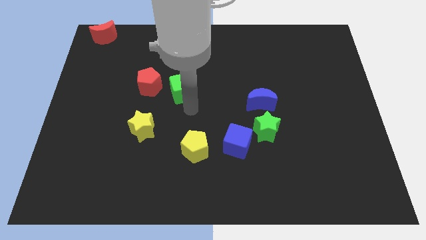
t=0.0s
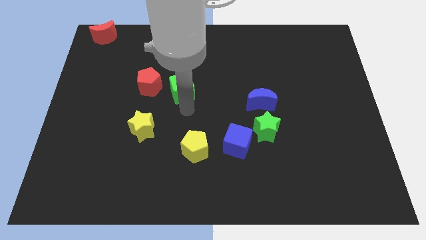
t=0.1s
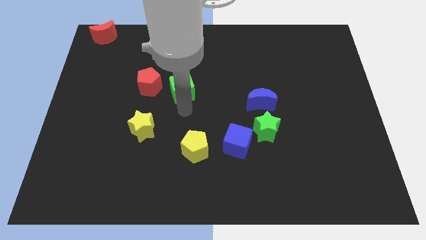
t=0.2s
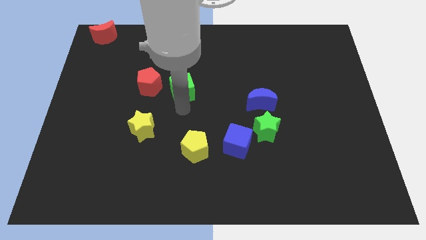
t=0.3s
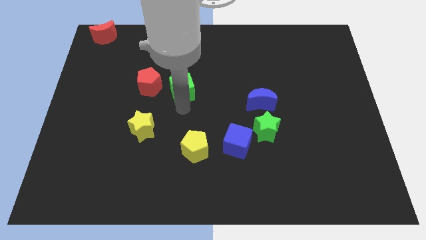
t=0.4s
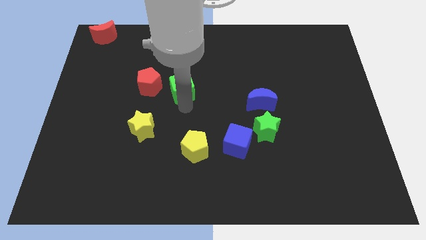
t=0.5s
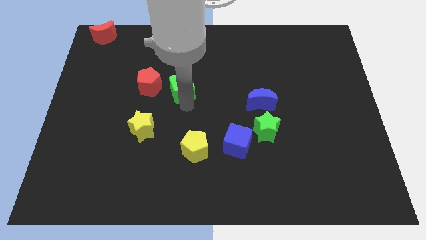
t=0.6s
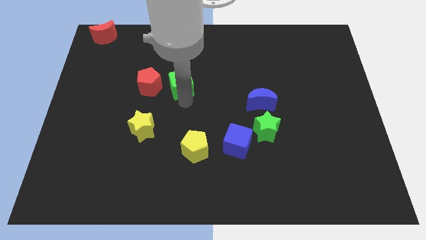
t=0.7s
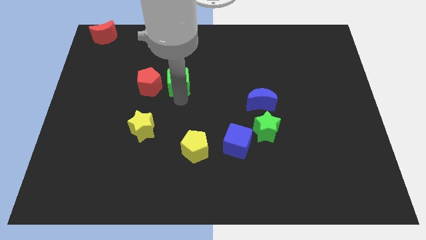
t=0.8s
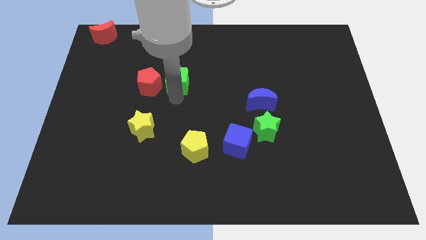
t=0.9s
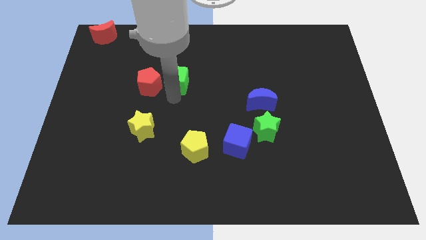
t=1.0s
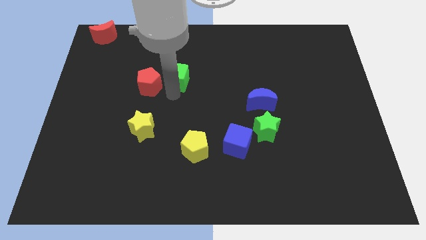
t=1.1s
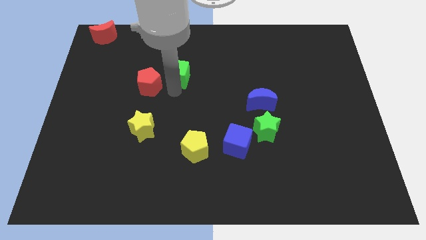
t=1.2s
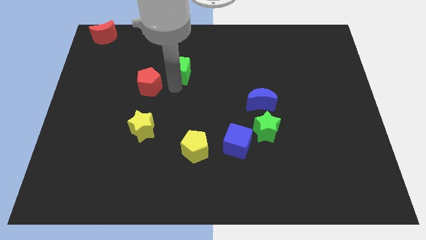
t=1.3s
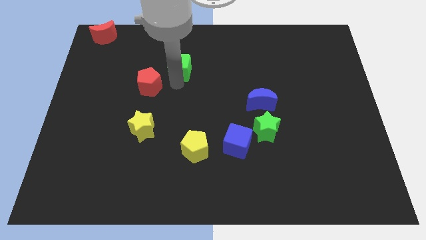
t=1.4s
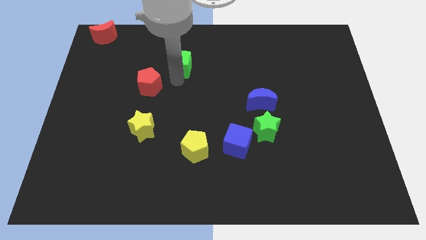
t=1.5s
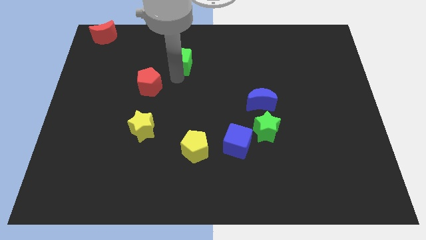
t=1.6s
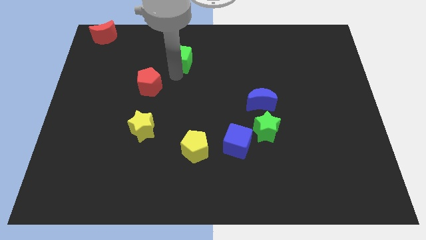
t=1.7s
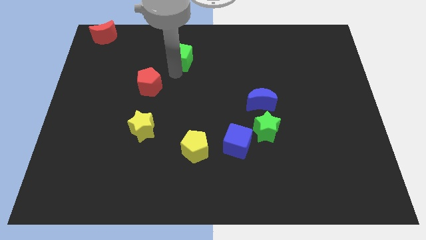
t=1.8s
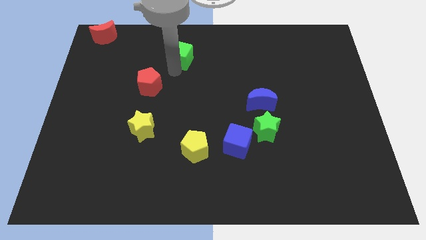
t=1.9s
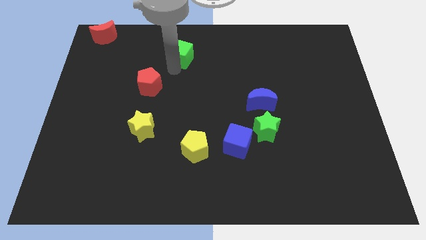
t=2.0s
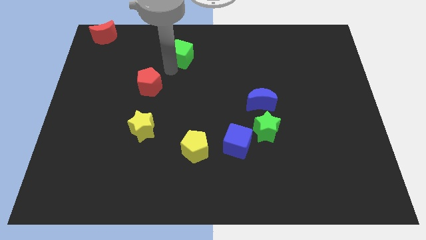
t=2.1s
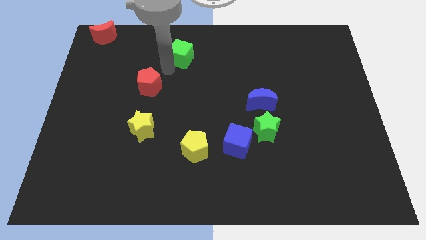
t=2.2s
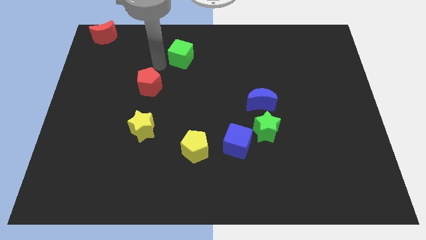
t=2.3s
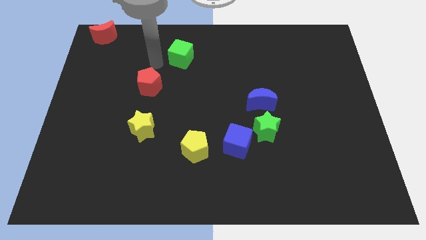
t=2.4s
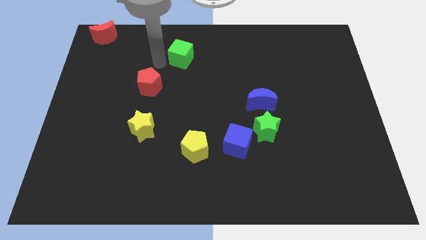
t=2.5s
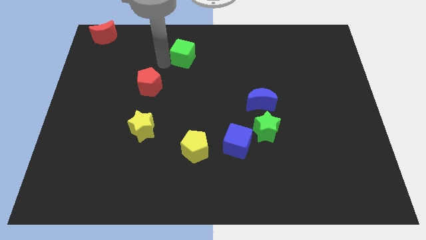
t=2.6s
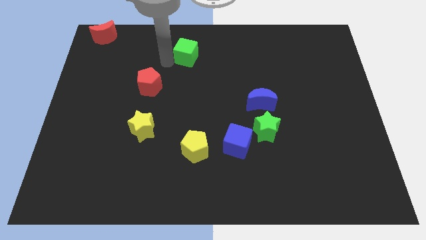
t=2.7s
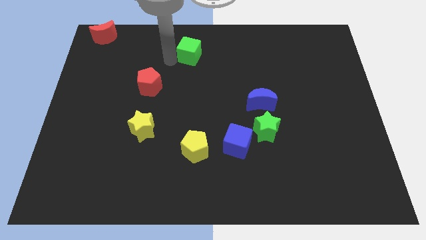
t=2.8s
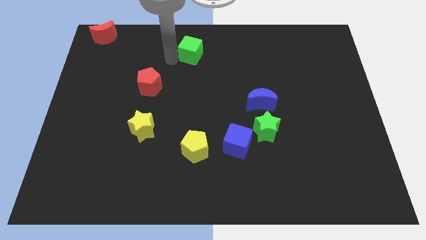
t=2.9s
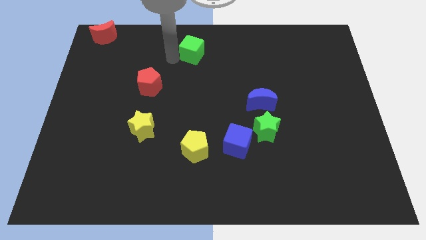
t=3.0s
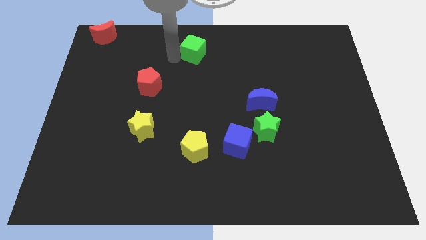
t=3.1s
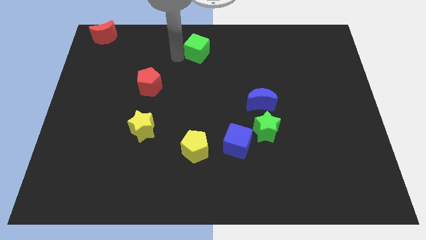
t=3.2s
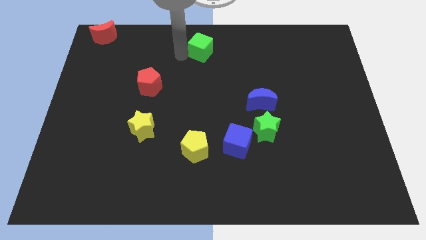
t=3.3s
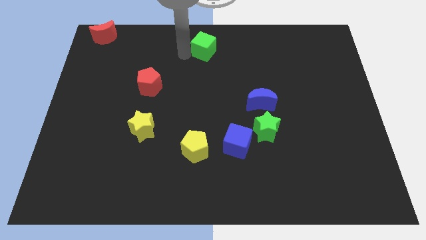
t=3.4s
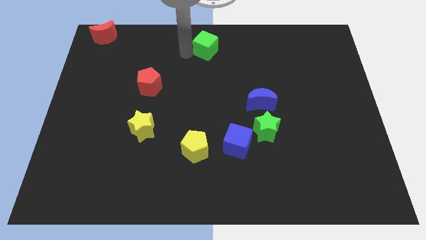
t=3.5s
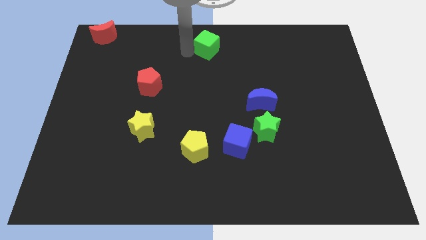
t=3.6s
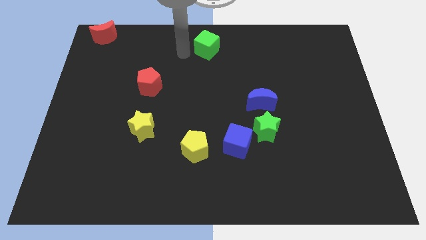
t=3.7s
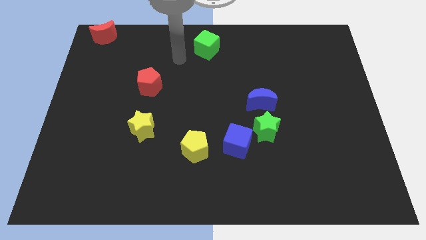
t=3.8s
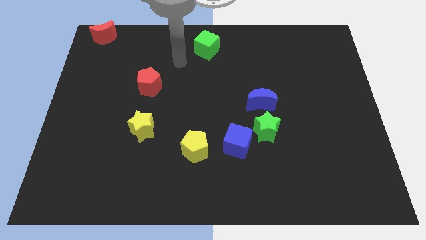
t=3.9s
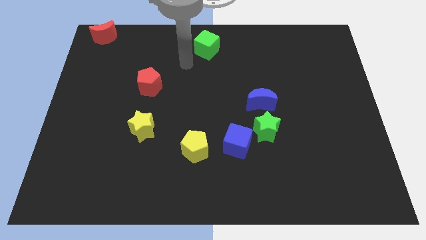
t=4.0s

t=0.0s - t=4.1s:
move green cube vertically above yellow pentagon

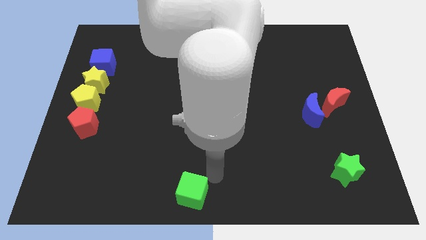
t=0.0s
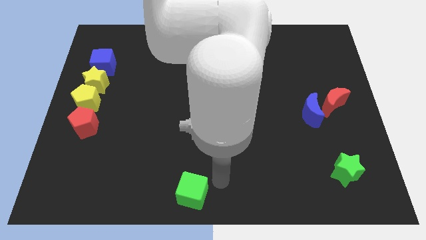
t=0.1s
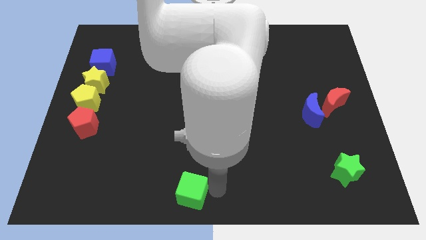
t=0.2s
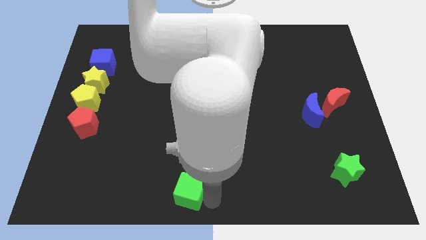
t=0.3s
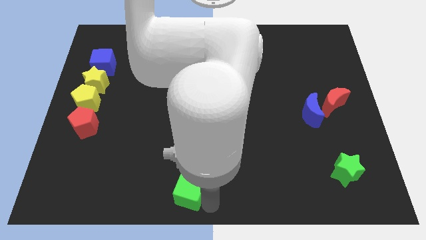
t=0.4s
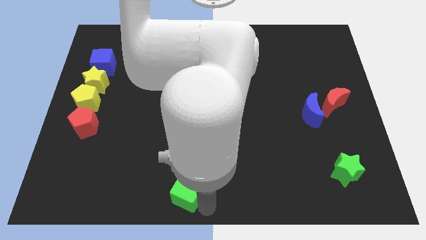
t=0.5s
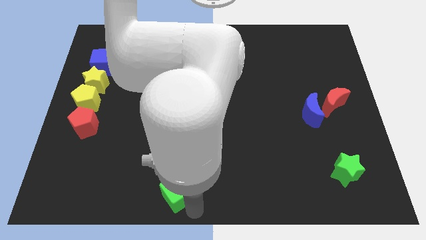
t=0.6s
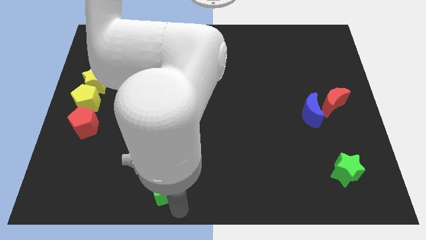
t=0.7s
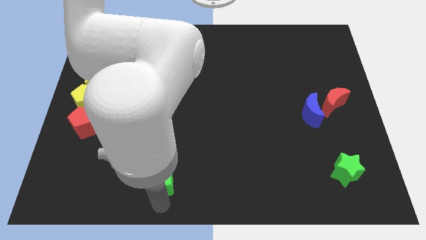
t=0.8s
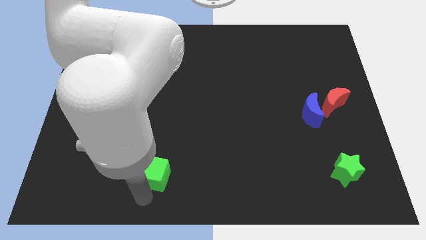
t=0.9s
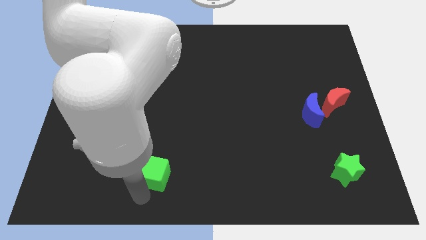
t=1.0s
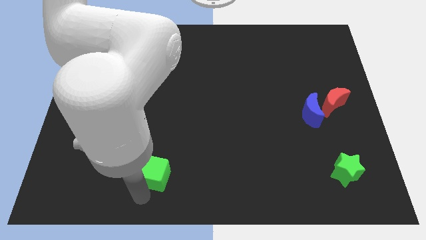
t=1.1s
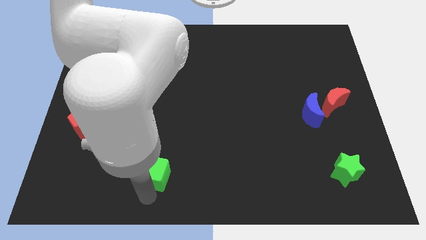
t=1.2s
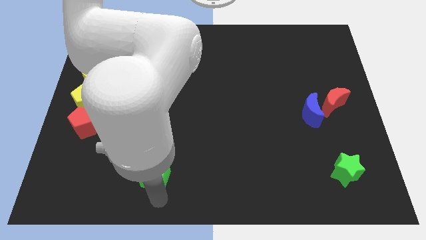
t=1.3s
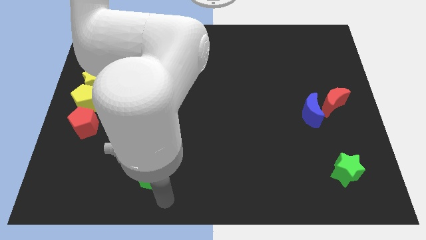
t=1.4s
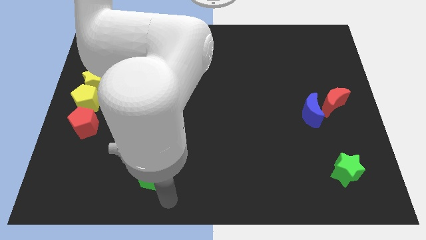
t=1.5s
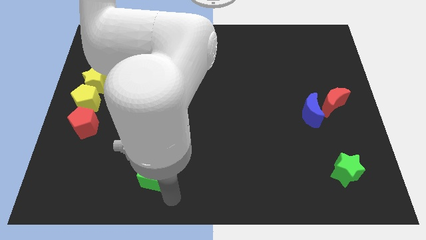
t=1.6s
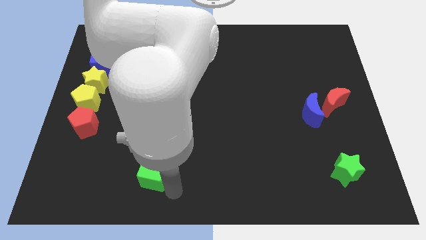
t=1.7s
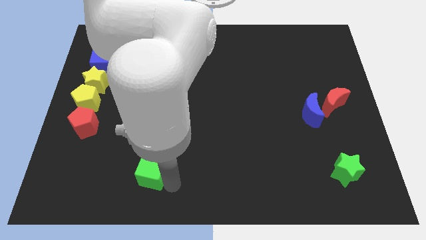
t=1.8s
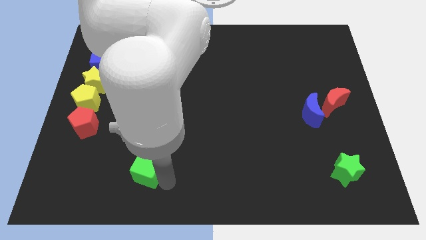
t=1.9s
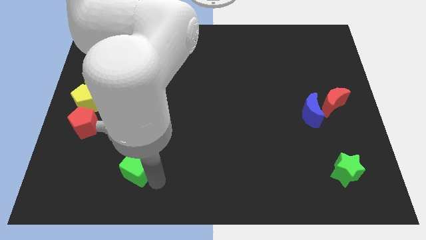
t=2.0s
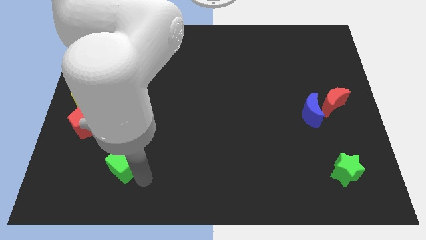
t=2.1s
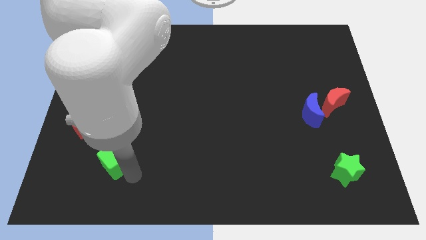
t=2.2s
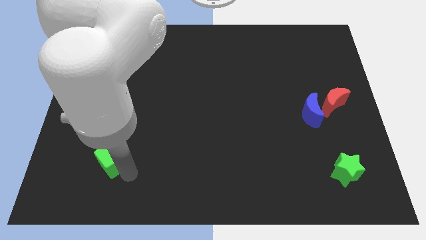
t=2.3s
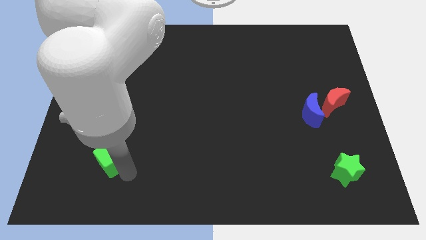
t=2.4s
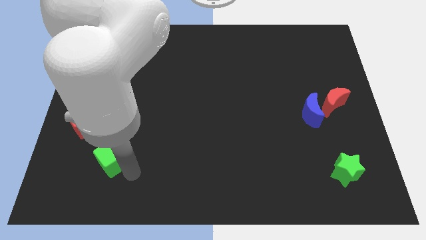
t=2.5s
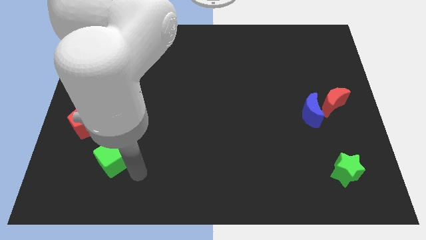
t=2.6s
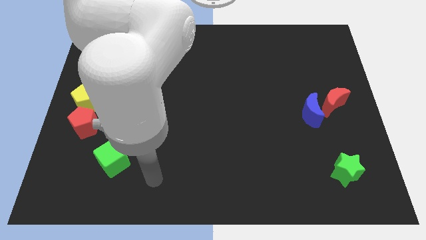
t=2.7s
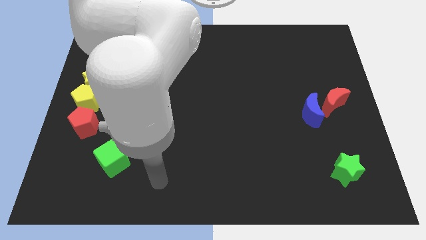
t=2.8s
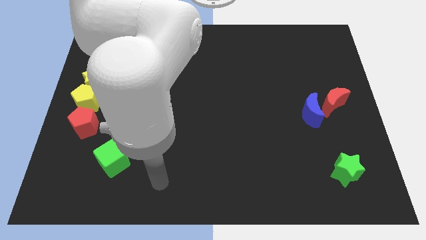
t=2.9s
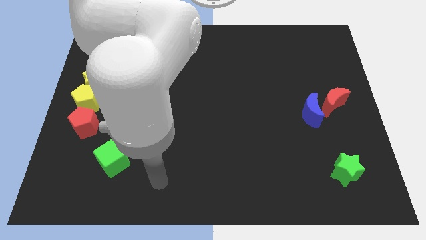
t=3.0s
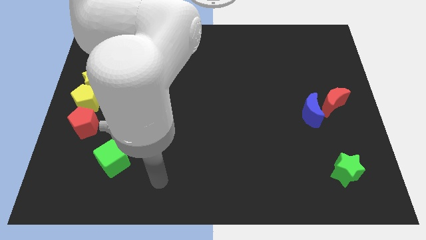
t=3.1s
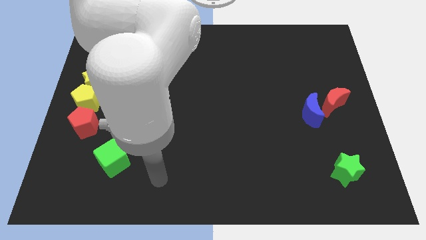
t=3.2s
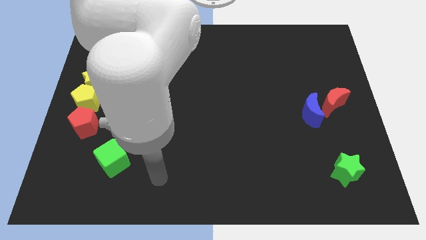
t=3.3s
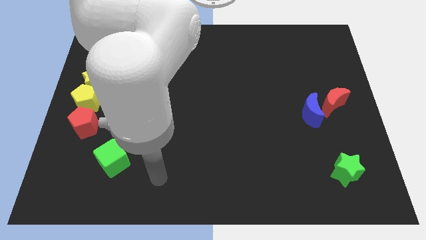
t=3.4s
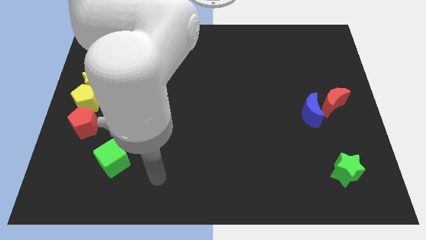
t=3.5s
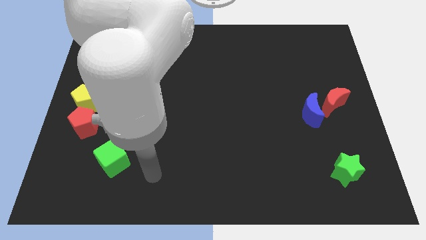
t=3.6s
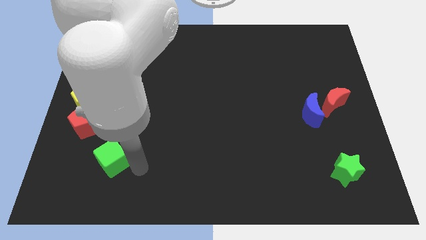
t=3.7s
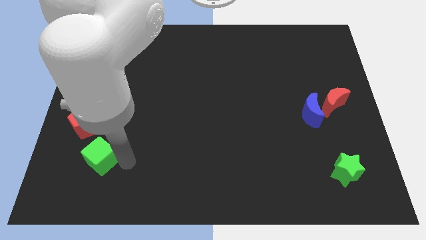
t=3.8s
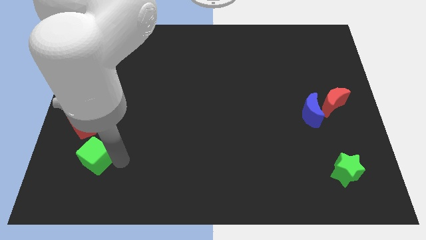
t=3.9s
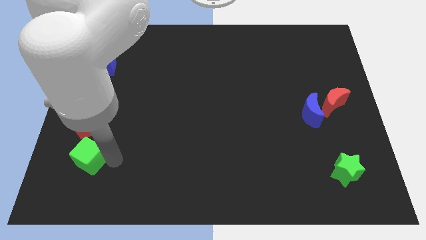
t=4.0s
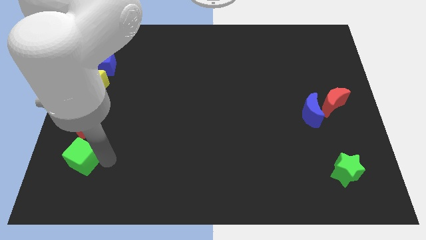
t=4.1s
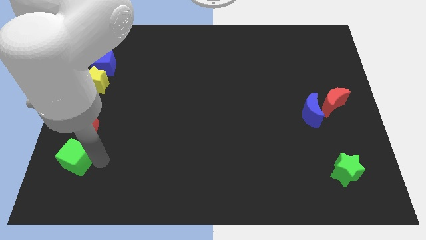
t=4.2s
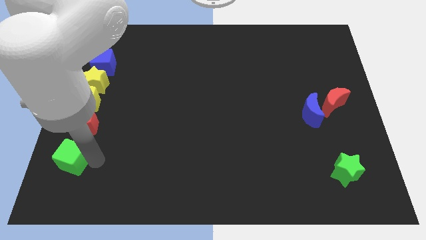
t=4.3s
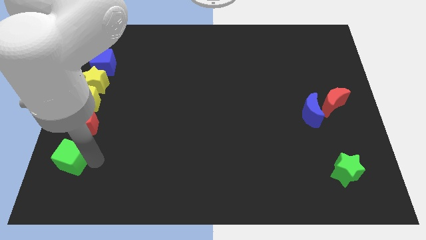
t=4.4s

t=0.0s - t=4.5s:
place the green cube below the red pentagon

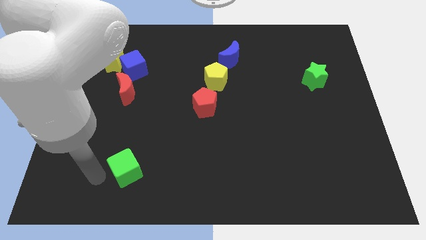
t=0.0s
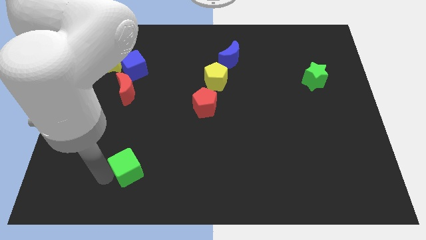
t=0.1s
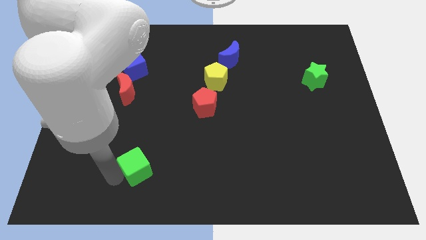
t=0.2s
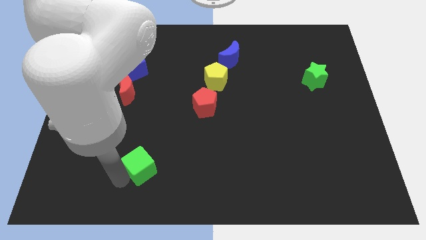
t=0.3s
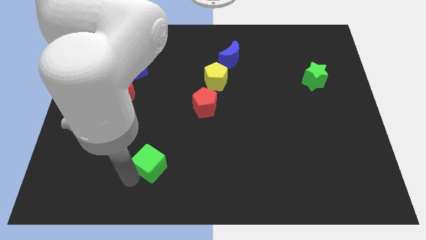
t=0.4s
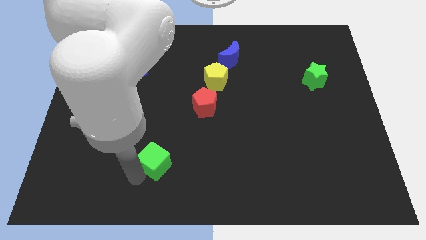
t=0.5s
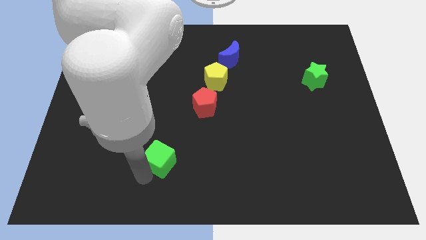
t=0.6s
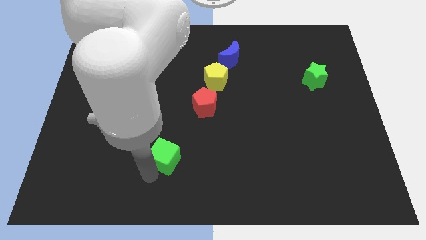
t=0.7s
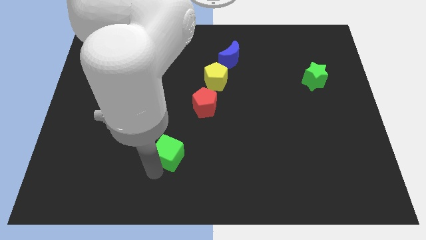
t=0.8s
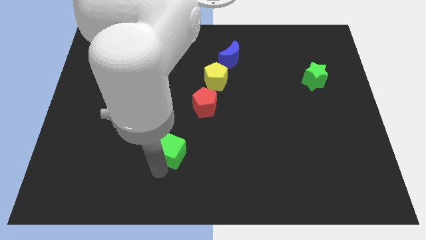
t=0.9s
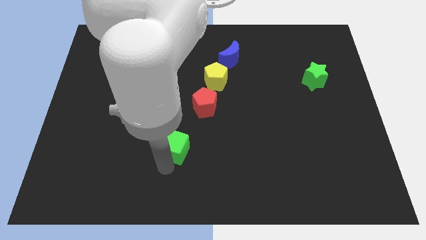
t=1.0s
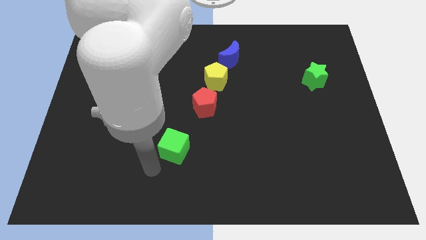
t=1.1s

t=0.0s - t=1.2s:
slightly push the green cube towards the red pentagon
